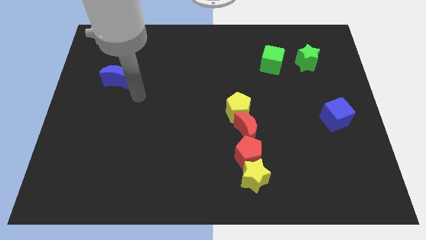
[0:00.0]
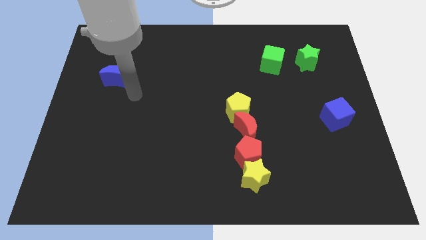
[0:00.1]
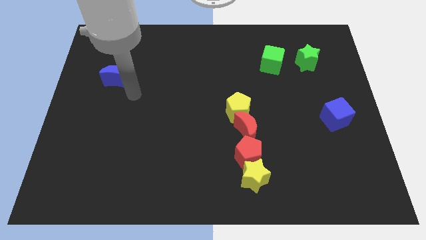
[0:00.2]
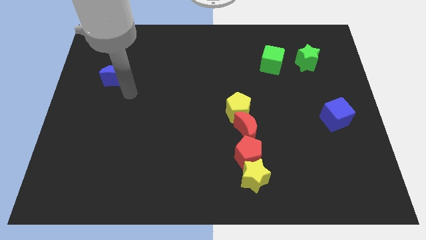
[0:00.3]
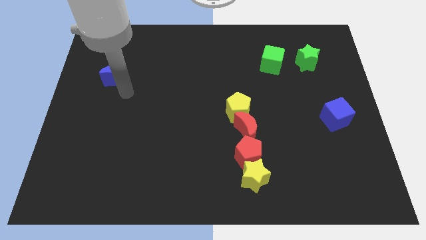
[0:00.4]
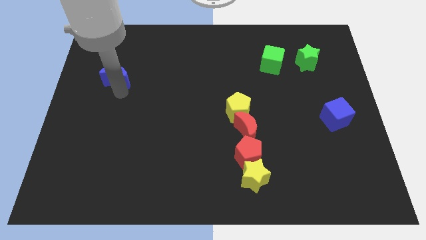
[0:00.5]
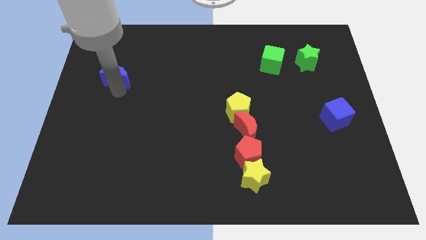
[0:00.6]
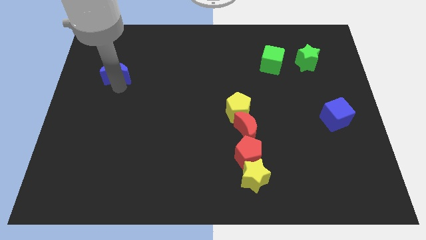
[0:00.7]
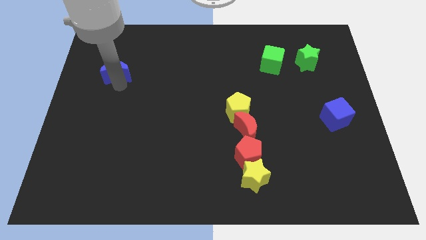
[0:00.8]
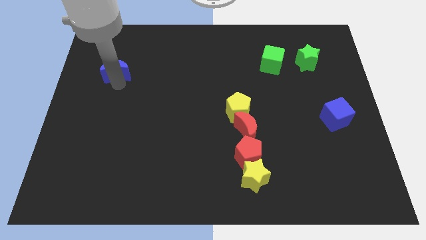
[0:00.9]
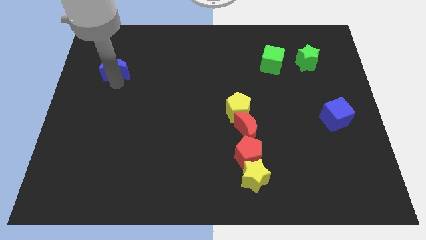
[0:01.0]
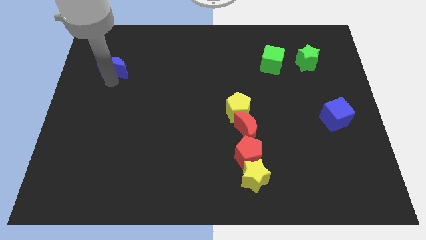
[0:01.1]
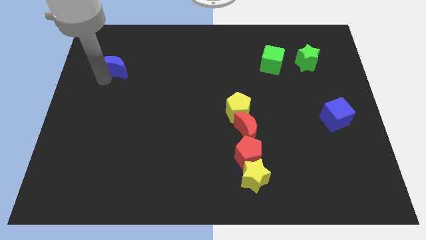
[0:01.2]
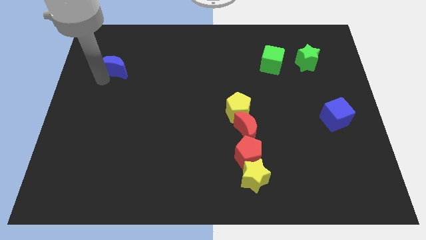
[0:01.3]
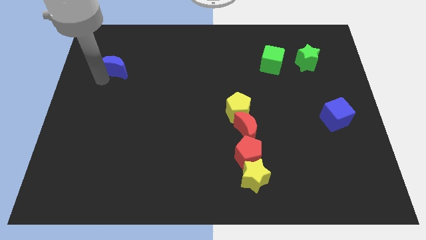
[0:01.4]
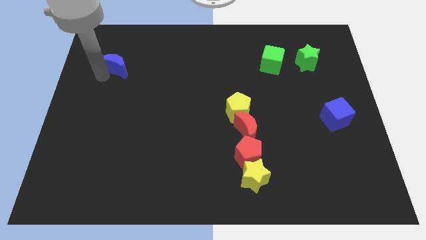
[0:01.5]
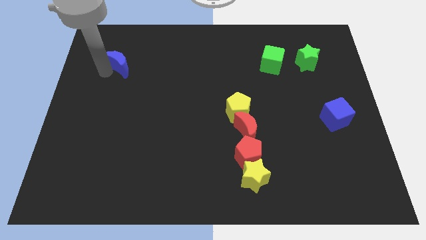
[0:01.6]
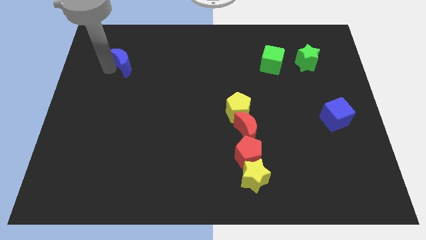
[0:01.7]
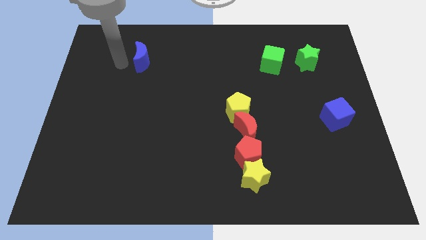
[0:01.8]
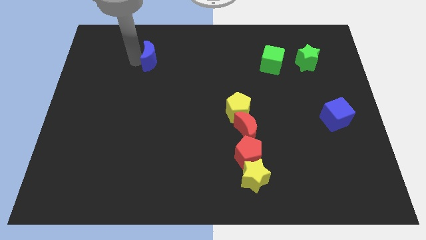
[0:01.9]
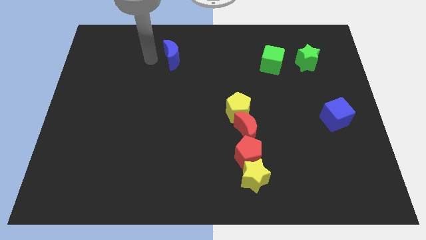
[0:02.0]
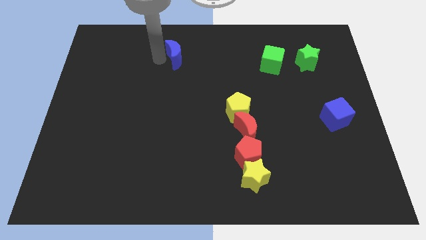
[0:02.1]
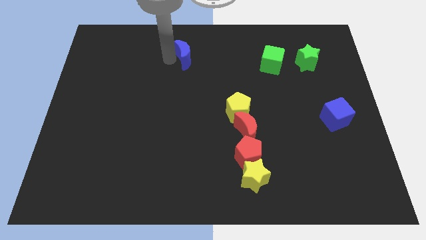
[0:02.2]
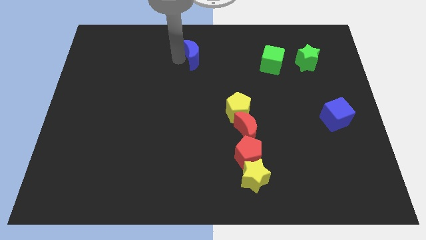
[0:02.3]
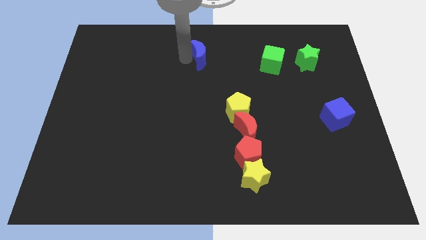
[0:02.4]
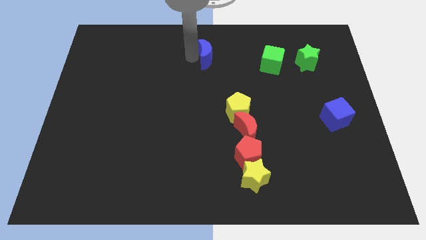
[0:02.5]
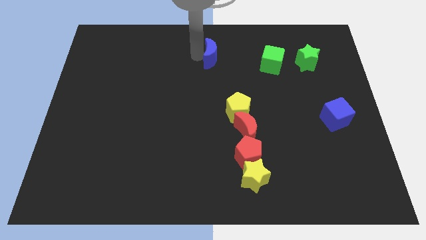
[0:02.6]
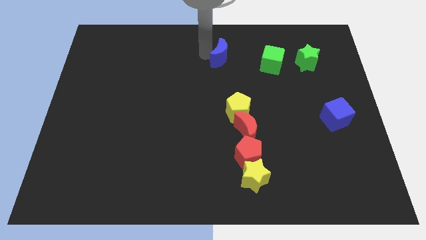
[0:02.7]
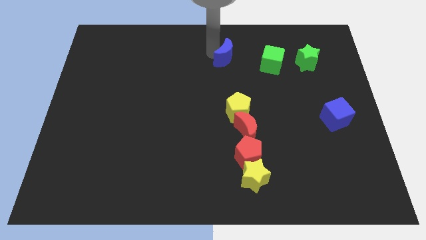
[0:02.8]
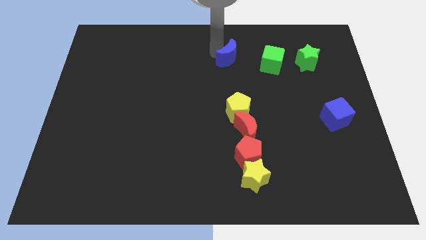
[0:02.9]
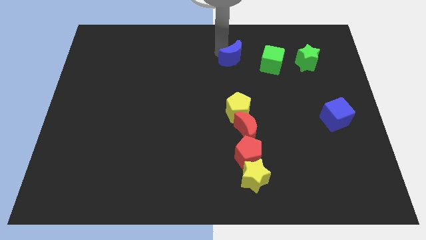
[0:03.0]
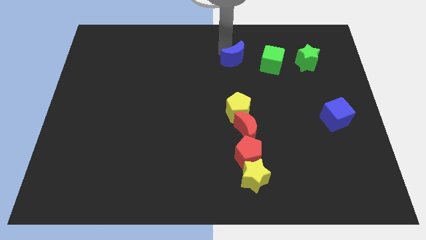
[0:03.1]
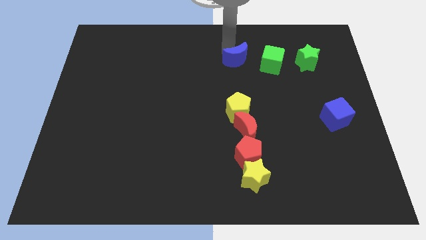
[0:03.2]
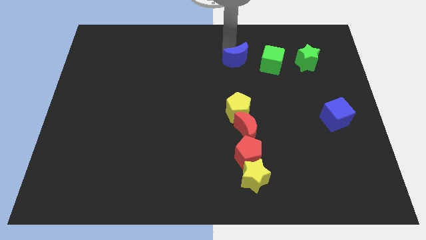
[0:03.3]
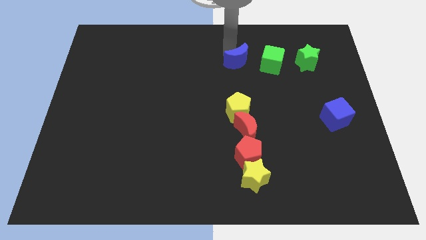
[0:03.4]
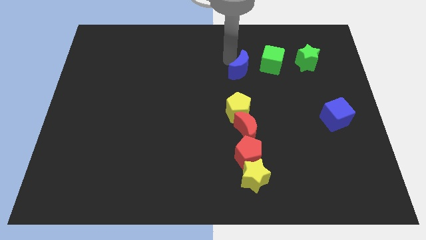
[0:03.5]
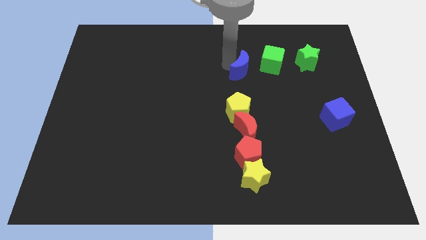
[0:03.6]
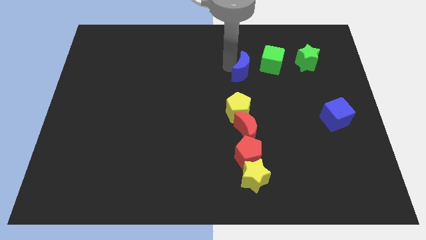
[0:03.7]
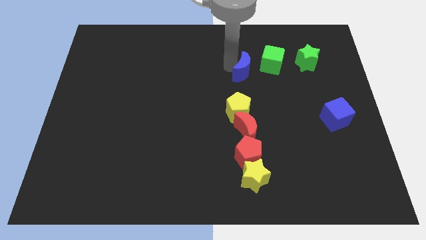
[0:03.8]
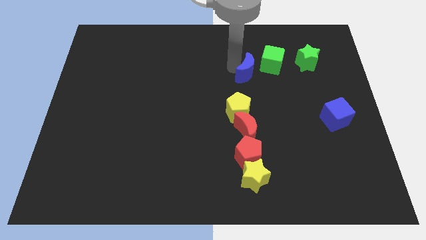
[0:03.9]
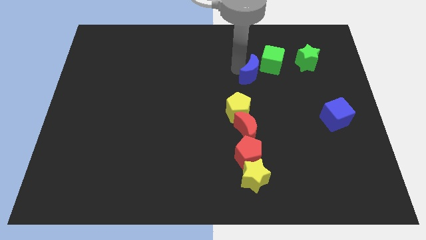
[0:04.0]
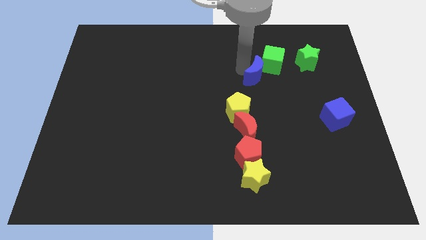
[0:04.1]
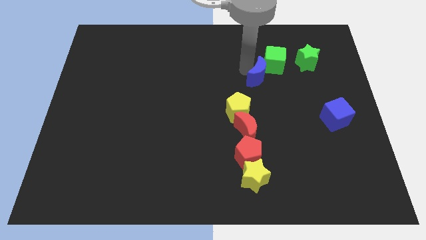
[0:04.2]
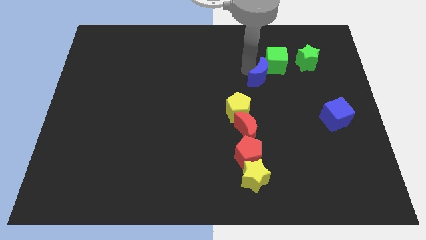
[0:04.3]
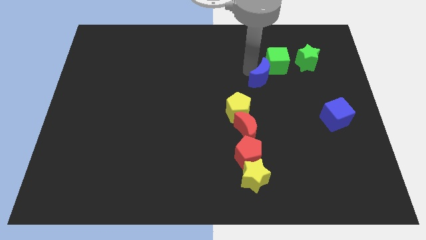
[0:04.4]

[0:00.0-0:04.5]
push the blue moon into green cube

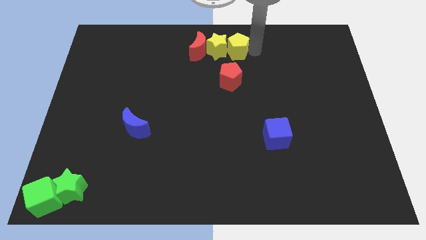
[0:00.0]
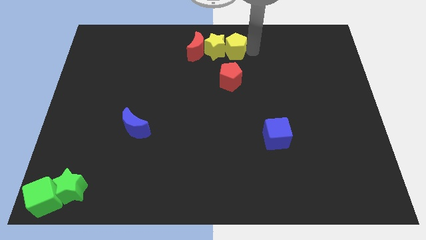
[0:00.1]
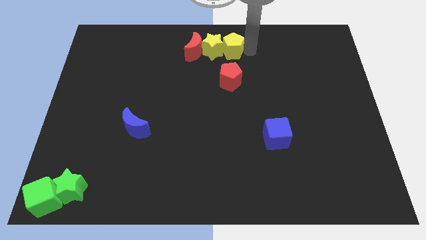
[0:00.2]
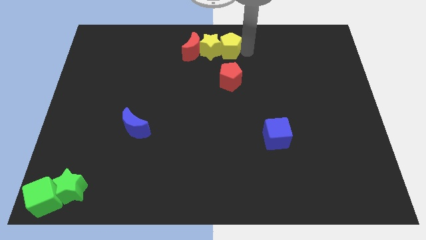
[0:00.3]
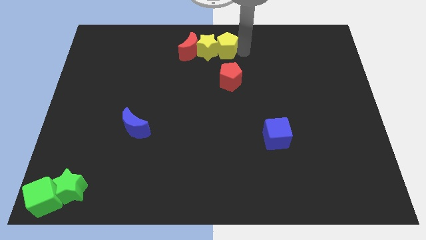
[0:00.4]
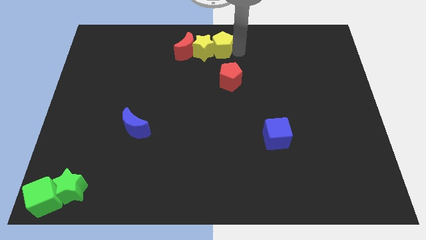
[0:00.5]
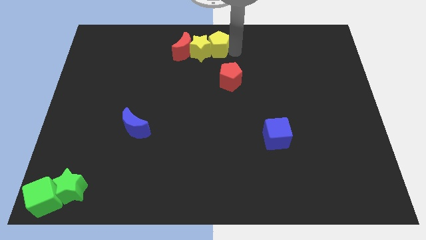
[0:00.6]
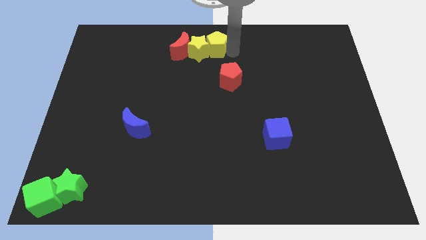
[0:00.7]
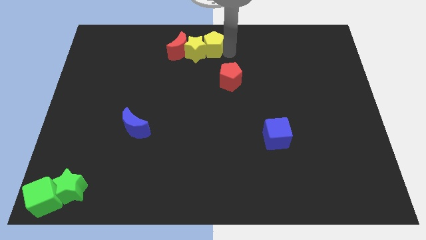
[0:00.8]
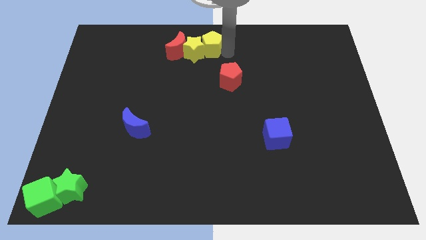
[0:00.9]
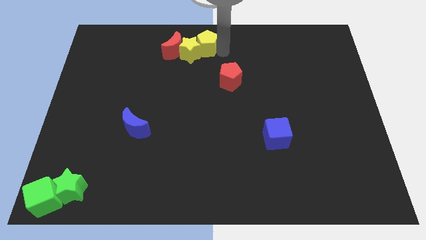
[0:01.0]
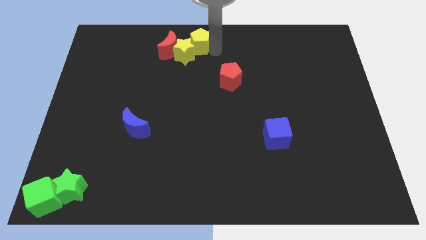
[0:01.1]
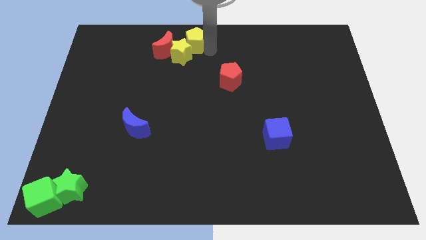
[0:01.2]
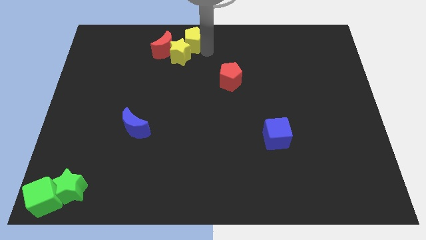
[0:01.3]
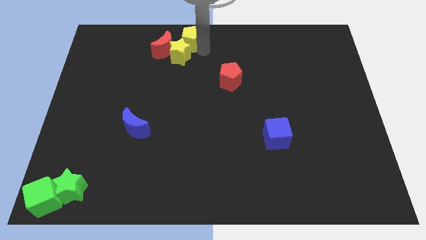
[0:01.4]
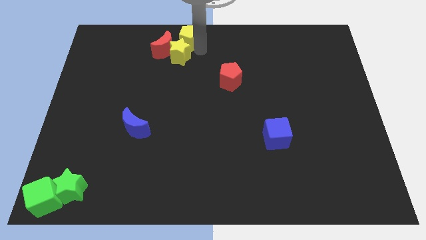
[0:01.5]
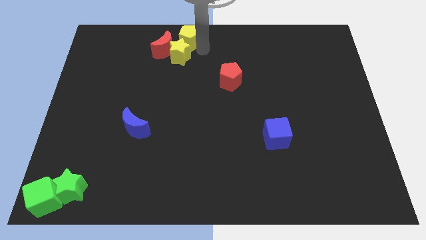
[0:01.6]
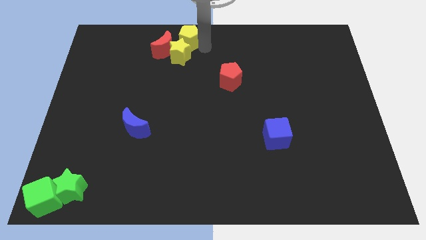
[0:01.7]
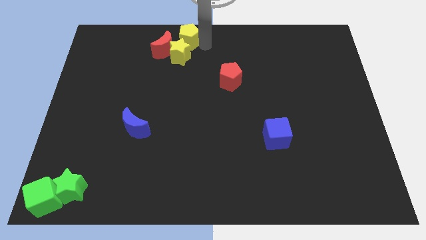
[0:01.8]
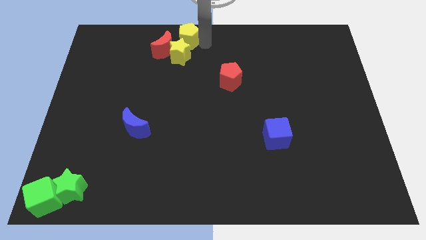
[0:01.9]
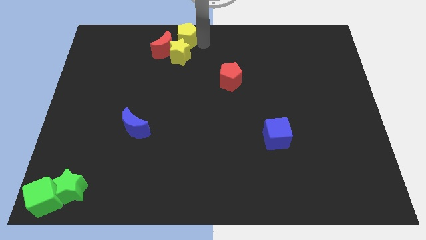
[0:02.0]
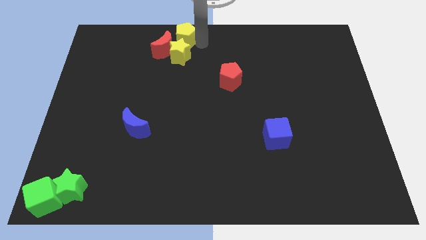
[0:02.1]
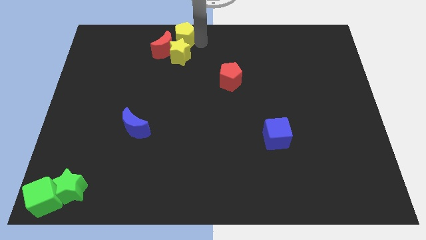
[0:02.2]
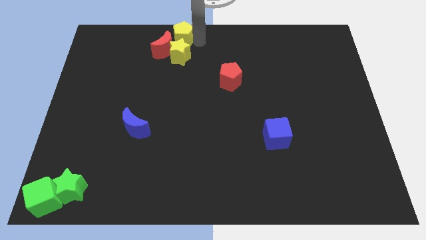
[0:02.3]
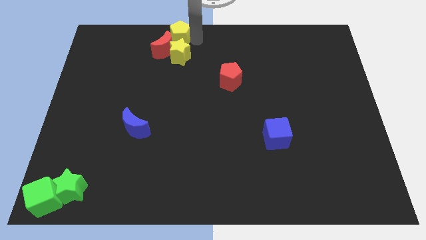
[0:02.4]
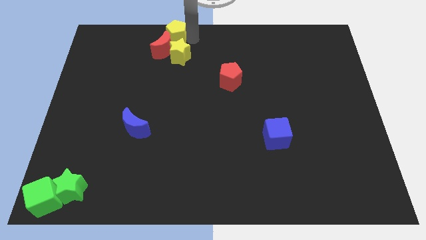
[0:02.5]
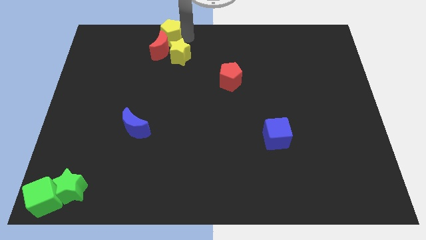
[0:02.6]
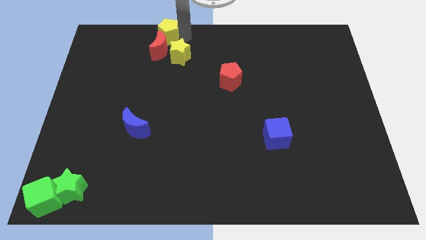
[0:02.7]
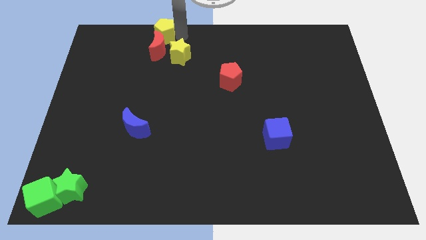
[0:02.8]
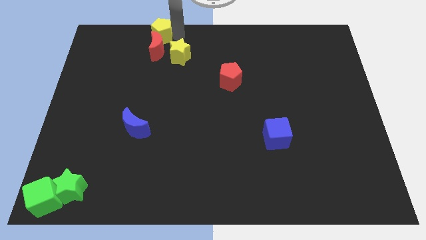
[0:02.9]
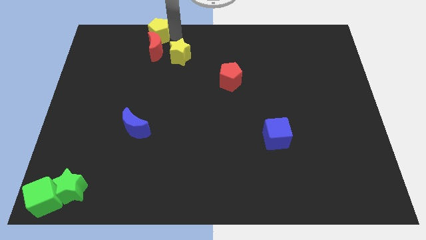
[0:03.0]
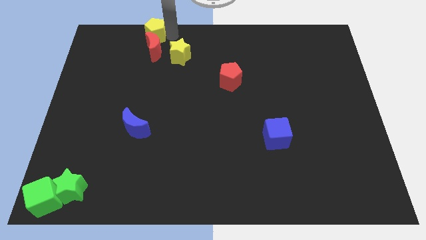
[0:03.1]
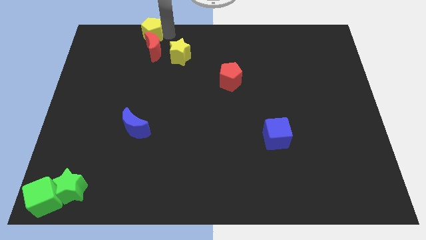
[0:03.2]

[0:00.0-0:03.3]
place the yellow pentagon at the top side of the red moon

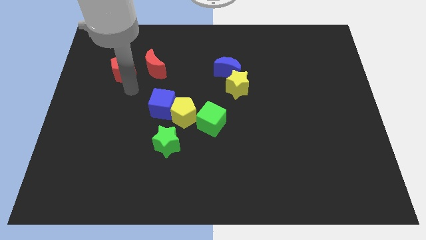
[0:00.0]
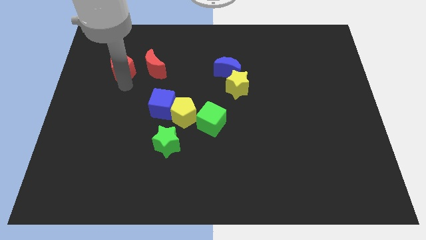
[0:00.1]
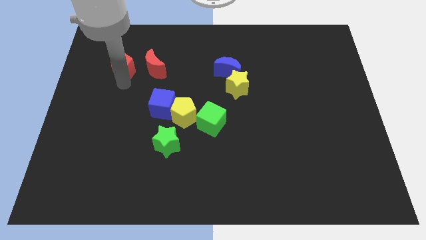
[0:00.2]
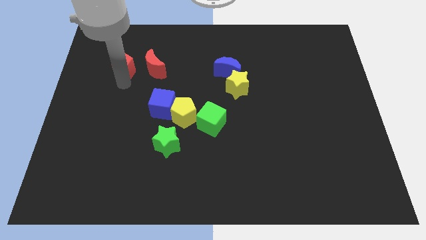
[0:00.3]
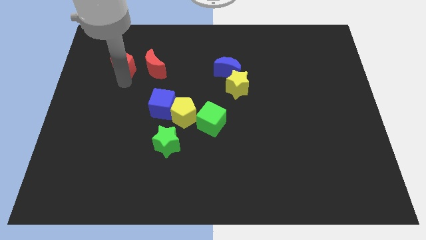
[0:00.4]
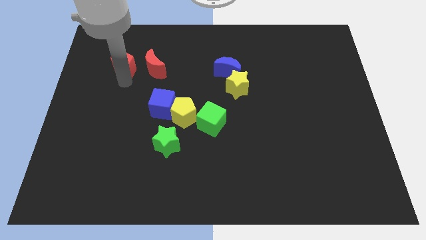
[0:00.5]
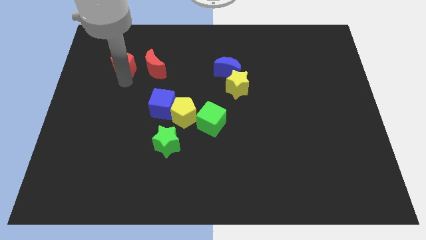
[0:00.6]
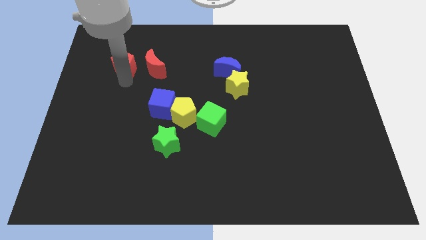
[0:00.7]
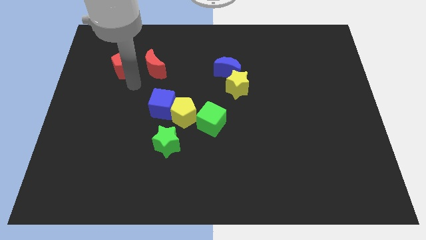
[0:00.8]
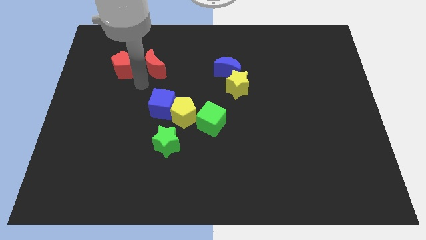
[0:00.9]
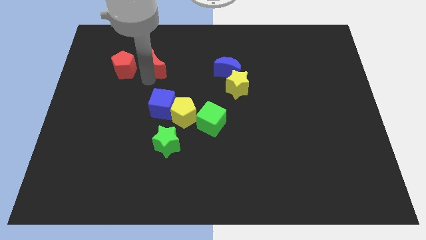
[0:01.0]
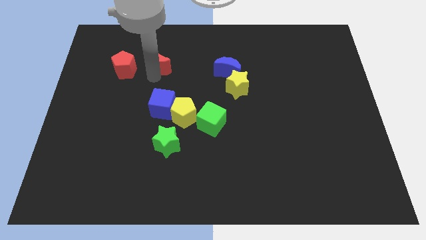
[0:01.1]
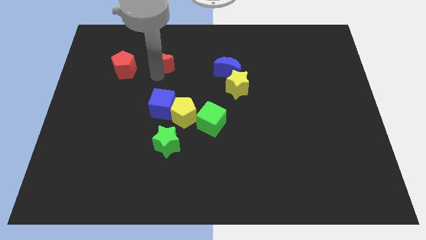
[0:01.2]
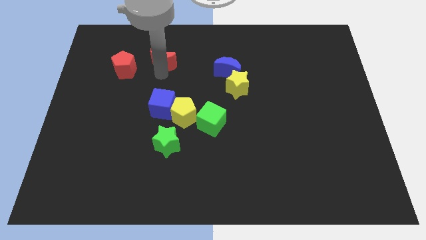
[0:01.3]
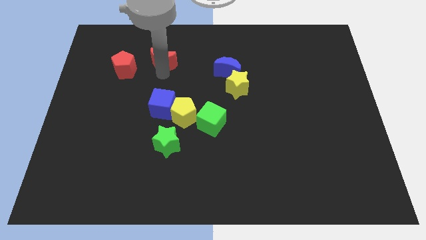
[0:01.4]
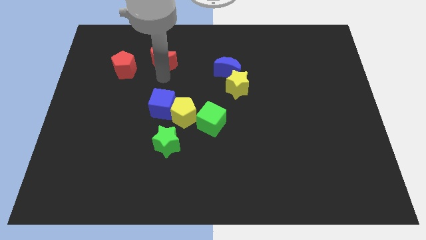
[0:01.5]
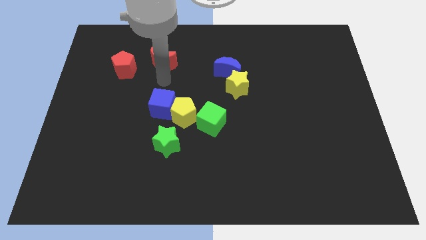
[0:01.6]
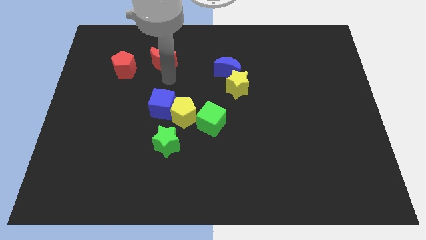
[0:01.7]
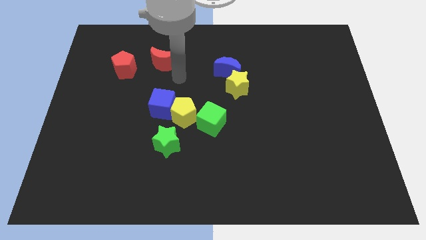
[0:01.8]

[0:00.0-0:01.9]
push both the red blocks slightly to the top side of the board
